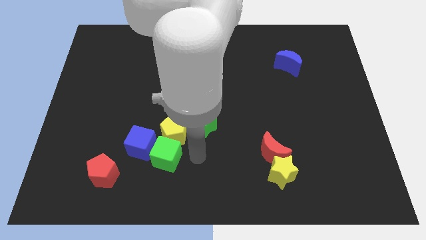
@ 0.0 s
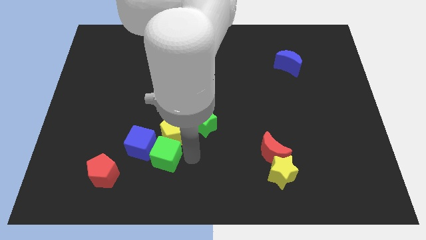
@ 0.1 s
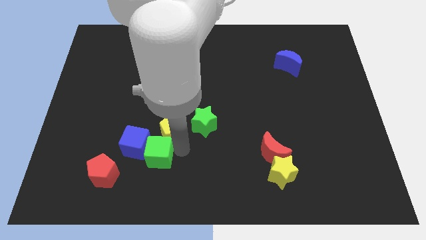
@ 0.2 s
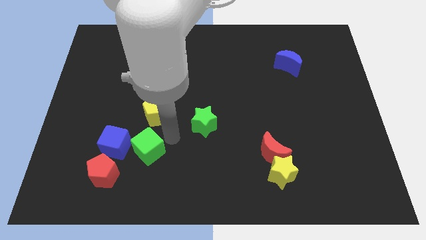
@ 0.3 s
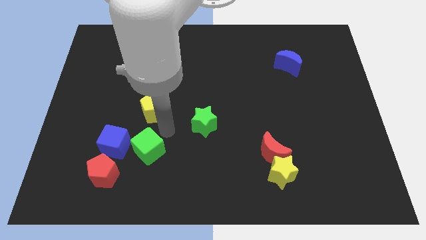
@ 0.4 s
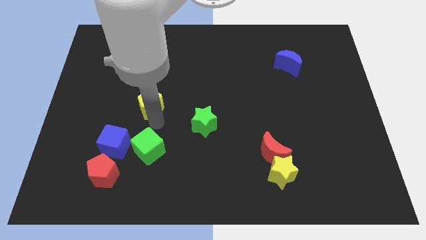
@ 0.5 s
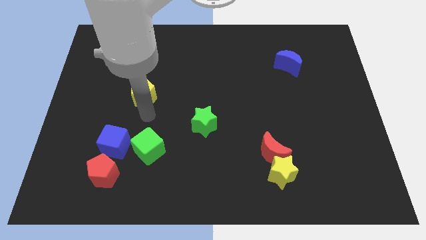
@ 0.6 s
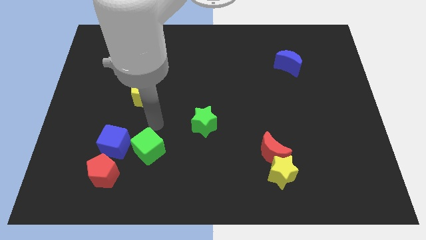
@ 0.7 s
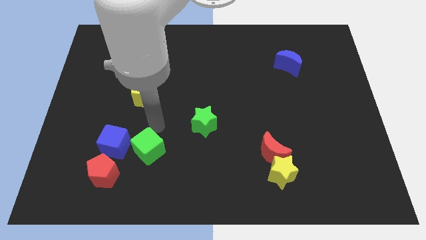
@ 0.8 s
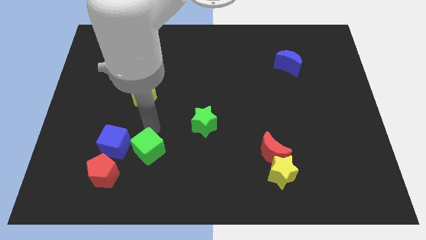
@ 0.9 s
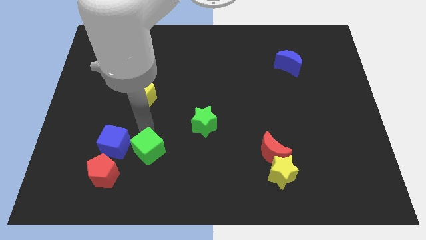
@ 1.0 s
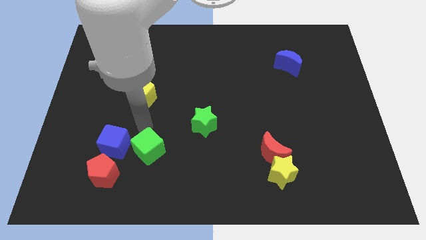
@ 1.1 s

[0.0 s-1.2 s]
push the yellow pentagon vertically to the top side of the green cube

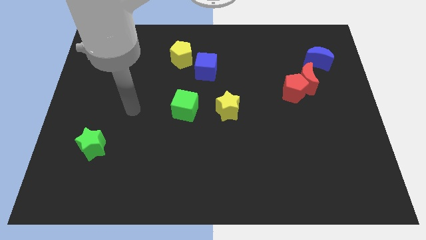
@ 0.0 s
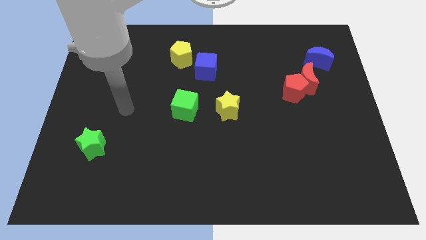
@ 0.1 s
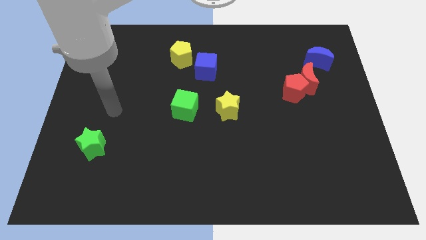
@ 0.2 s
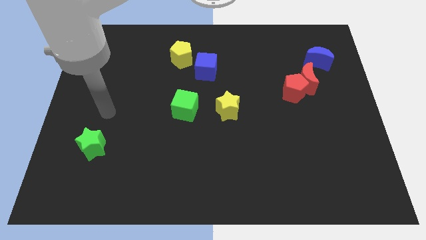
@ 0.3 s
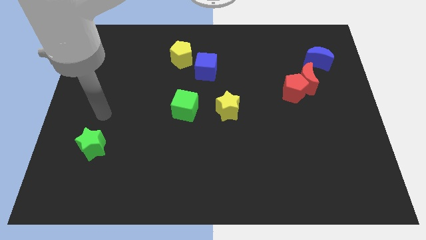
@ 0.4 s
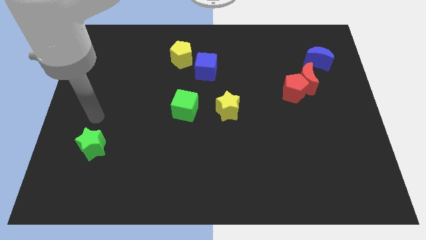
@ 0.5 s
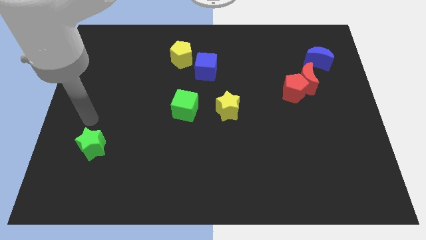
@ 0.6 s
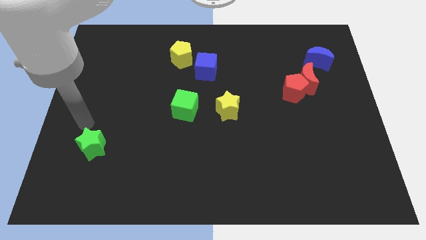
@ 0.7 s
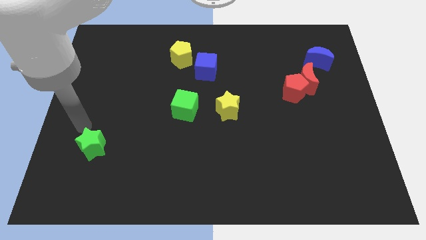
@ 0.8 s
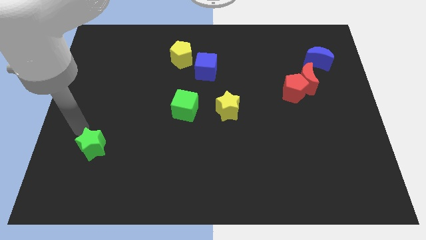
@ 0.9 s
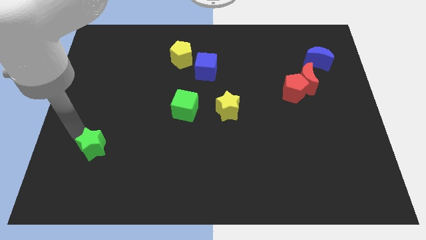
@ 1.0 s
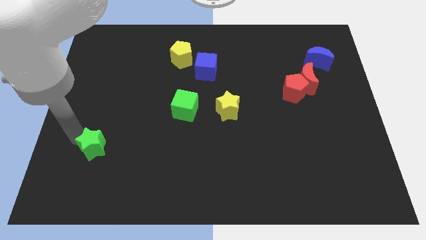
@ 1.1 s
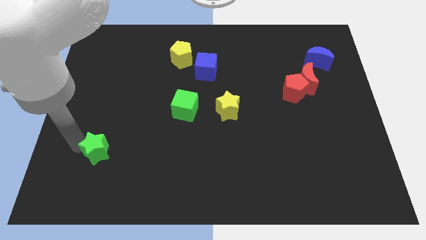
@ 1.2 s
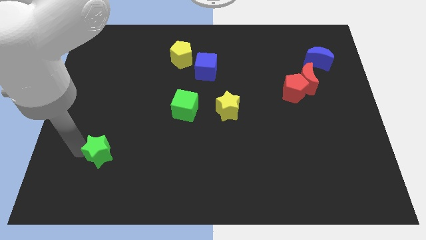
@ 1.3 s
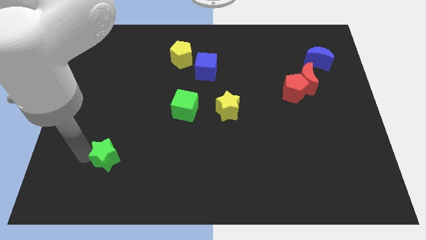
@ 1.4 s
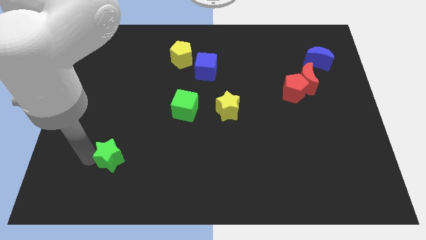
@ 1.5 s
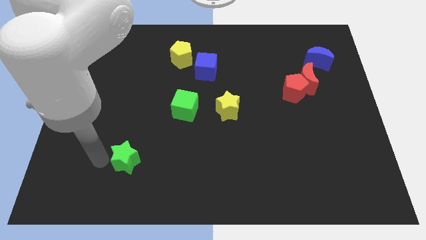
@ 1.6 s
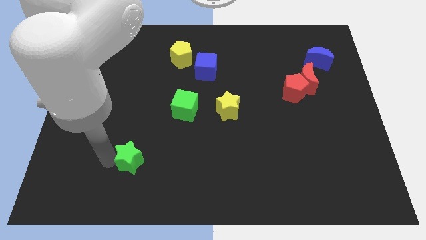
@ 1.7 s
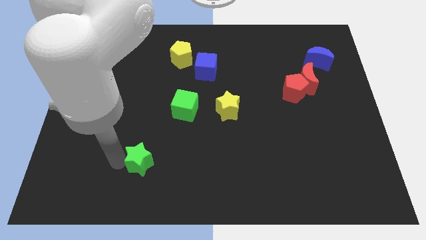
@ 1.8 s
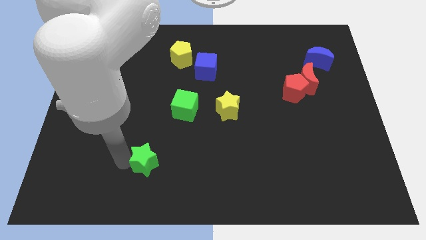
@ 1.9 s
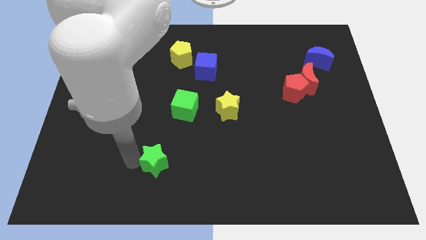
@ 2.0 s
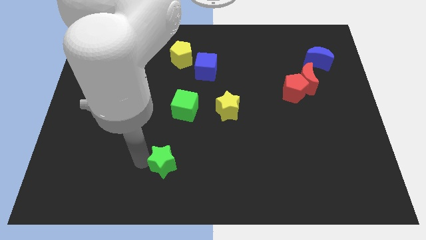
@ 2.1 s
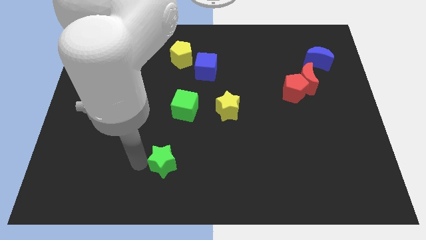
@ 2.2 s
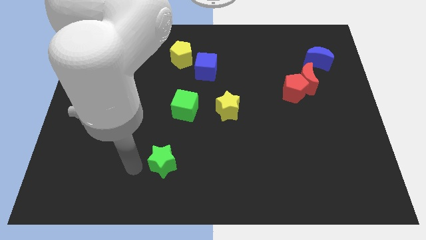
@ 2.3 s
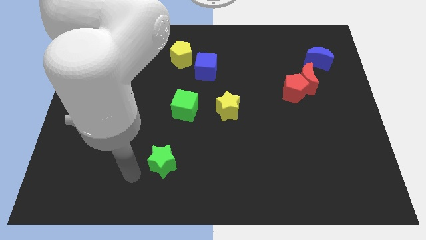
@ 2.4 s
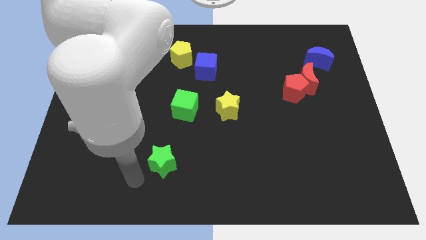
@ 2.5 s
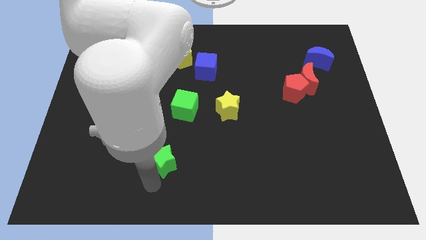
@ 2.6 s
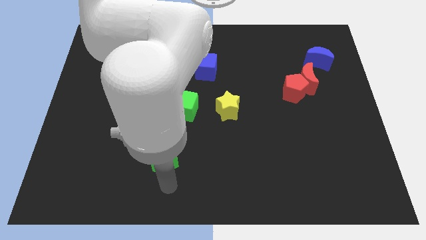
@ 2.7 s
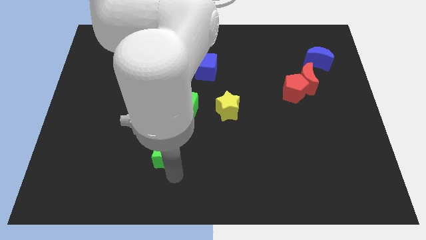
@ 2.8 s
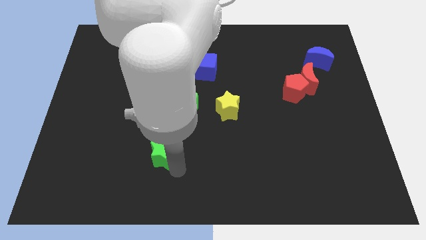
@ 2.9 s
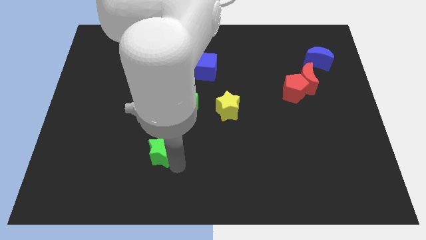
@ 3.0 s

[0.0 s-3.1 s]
place green star below green cube

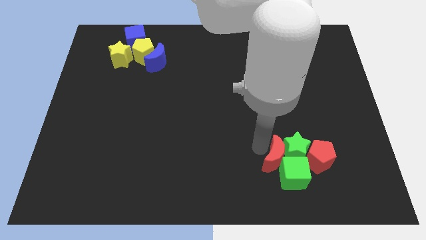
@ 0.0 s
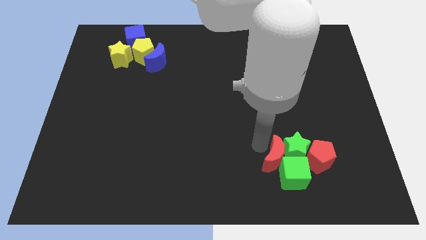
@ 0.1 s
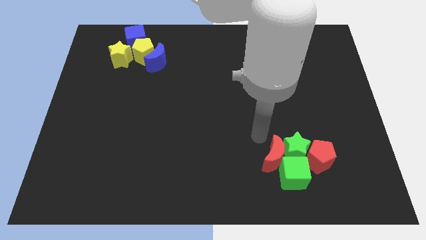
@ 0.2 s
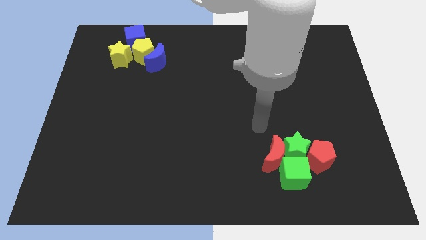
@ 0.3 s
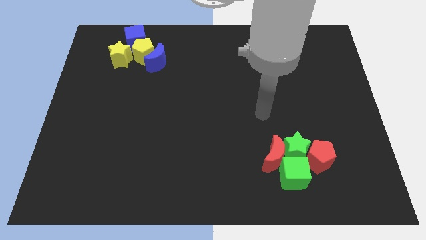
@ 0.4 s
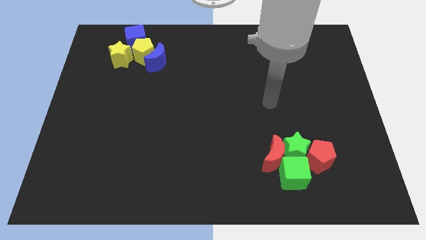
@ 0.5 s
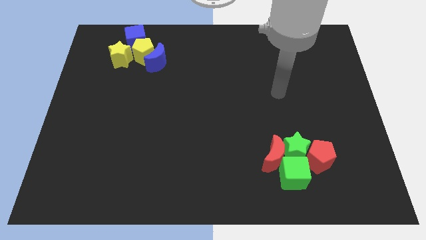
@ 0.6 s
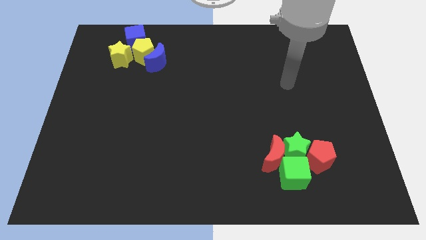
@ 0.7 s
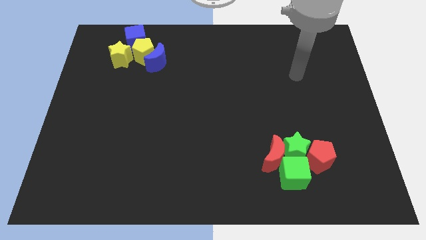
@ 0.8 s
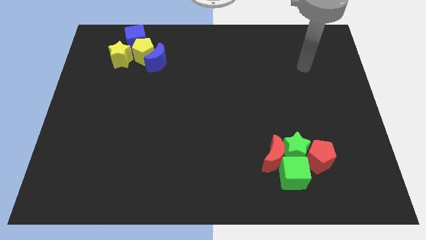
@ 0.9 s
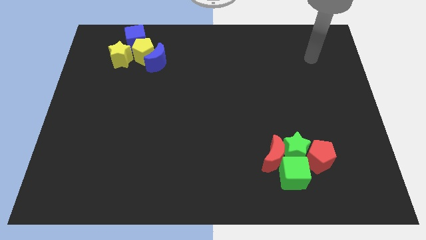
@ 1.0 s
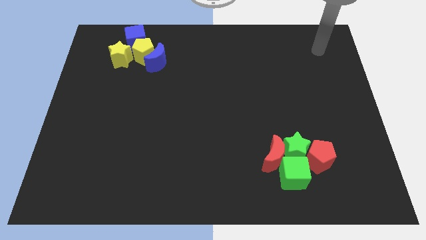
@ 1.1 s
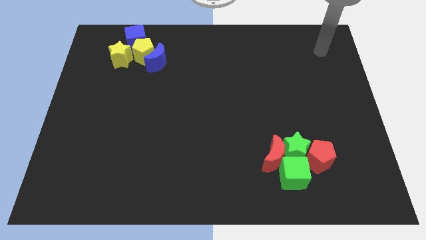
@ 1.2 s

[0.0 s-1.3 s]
move the arm away from the red moon

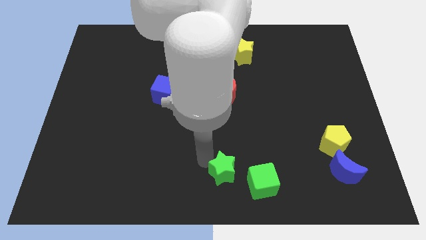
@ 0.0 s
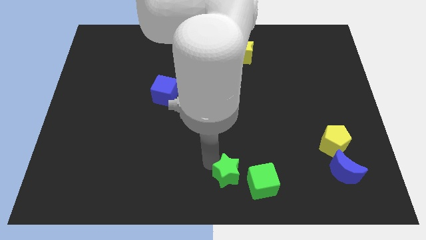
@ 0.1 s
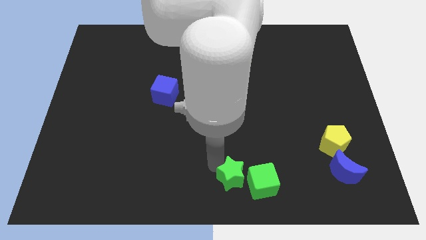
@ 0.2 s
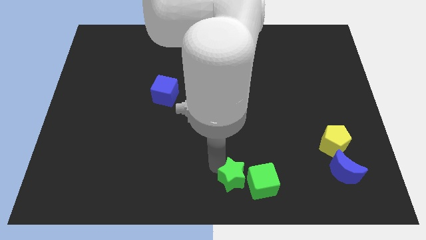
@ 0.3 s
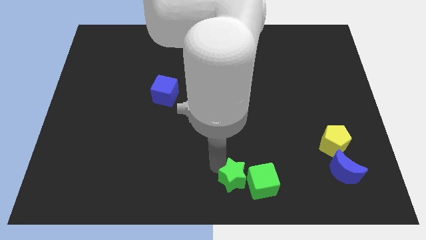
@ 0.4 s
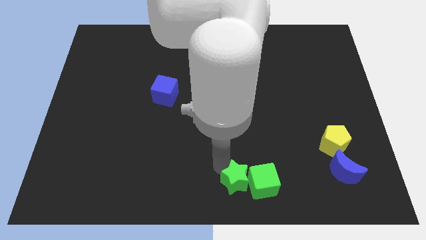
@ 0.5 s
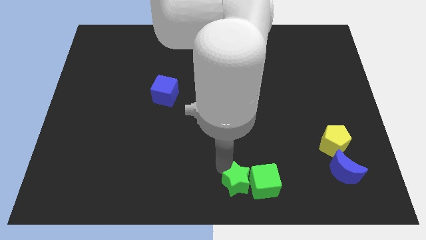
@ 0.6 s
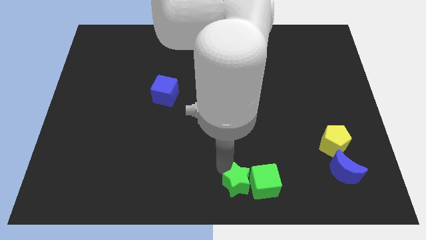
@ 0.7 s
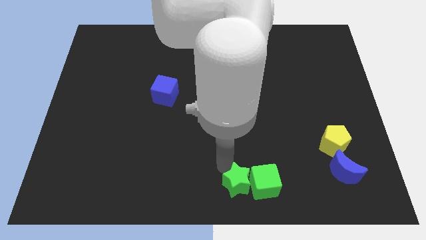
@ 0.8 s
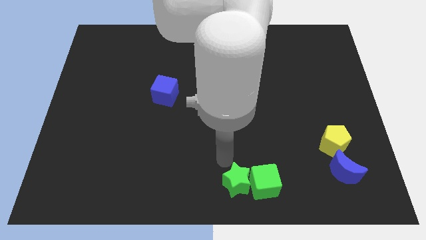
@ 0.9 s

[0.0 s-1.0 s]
move the green star to the left of the green cube on the board

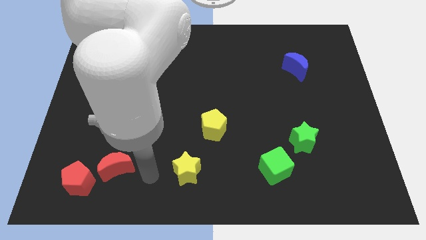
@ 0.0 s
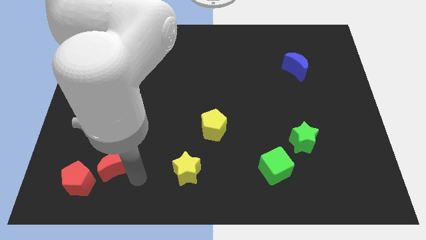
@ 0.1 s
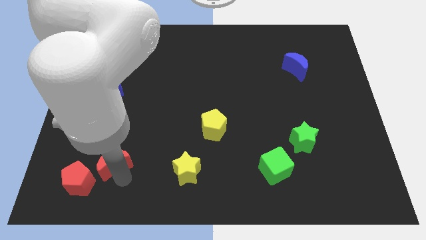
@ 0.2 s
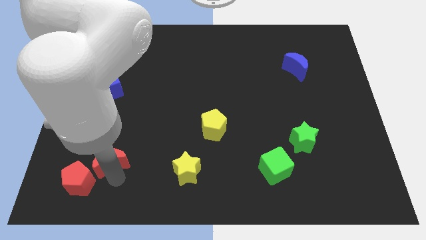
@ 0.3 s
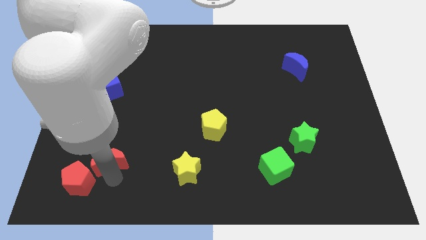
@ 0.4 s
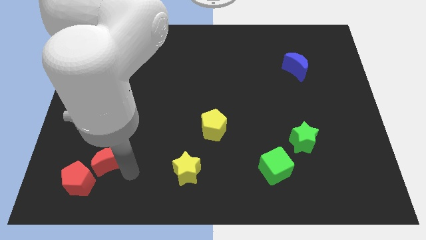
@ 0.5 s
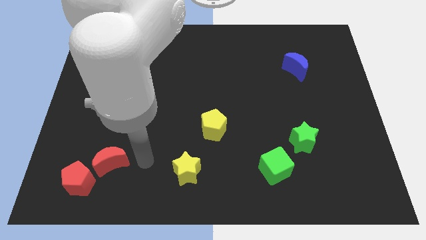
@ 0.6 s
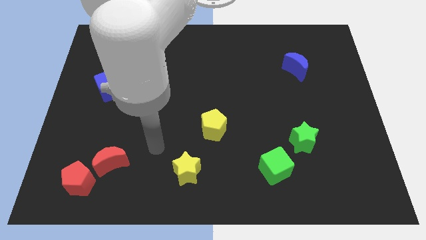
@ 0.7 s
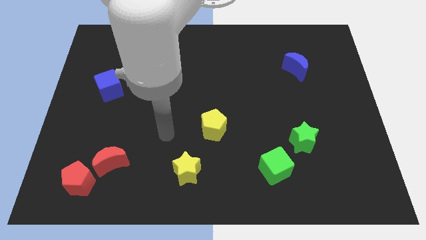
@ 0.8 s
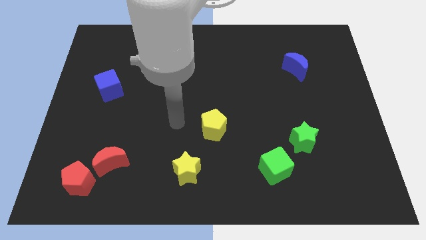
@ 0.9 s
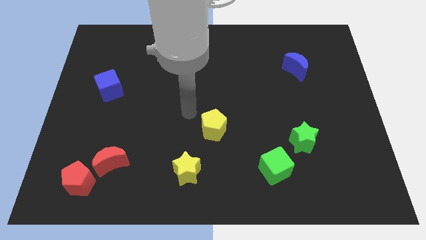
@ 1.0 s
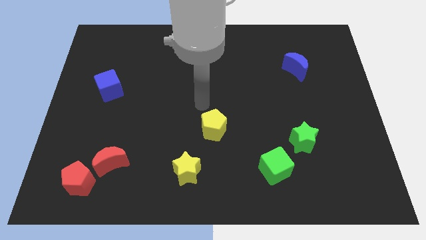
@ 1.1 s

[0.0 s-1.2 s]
place red crescent to the top right of red pentagon

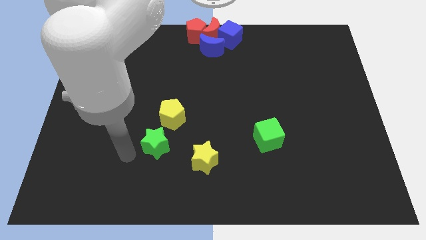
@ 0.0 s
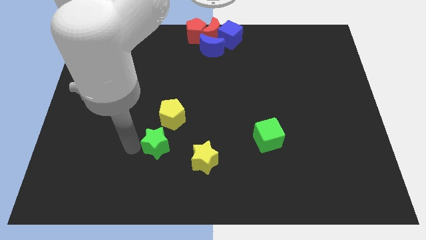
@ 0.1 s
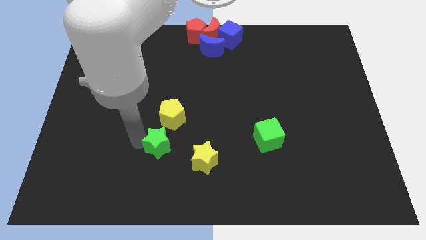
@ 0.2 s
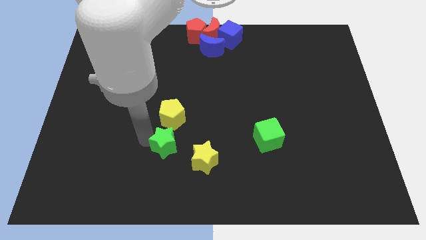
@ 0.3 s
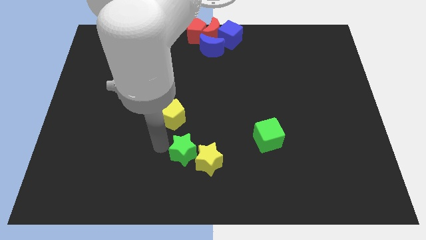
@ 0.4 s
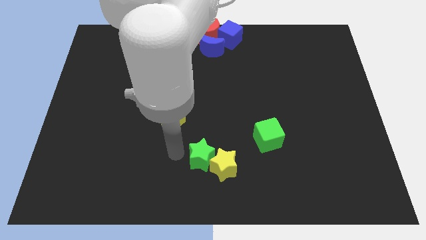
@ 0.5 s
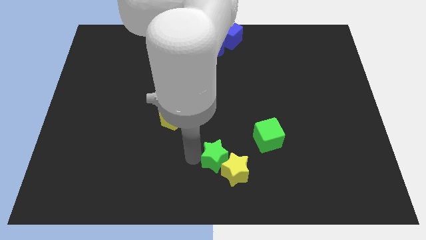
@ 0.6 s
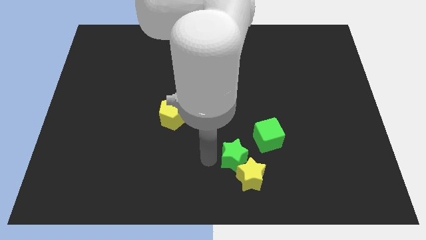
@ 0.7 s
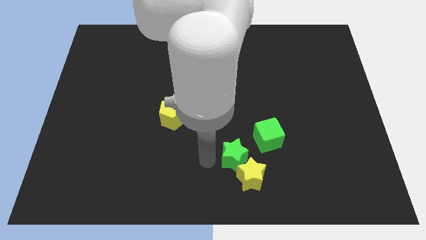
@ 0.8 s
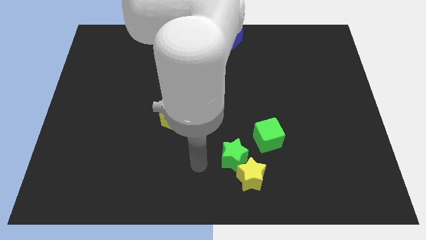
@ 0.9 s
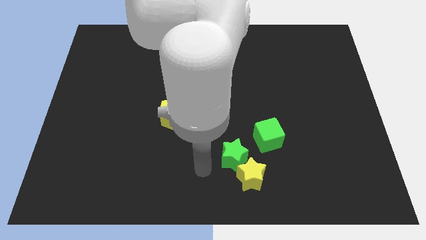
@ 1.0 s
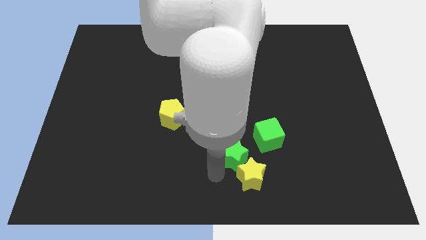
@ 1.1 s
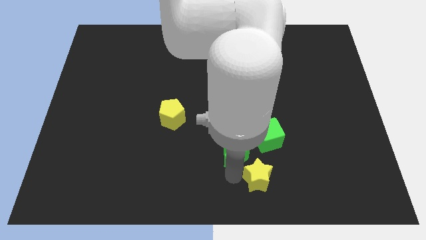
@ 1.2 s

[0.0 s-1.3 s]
slide green star into the yellow star
